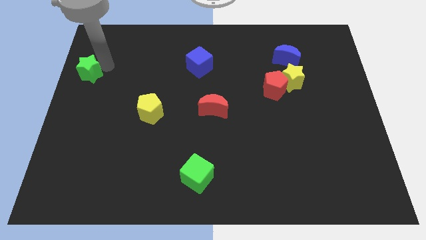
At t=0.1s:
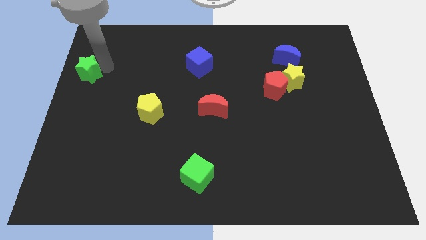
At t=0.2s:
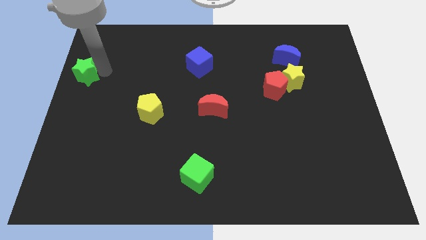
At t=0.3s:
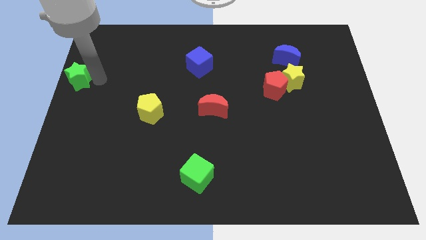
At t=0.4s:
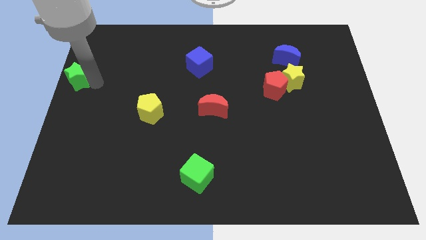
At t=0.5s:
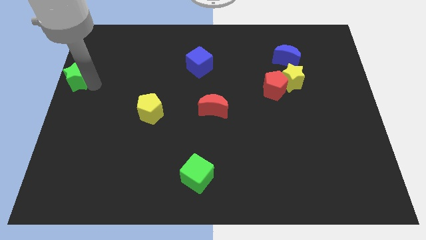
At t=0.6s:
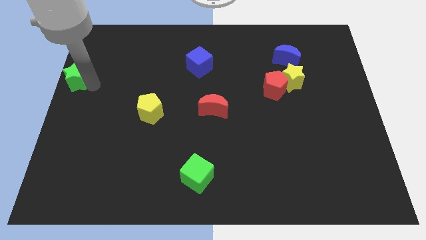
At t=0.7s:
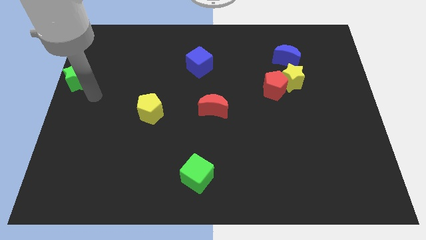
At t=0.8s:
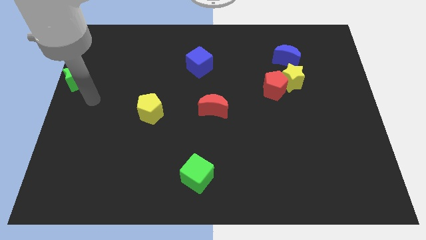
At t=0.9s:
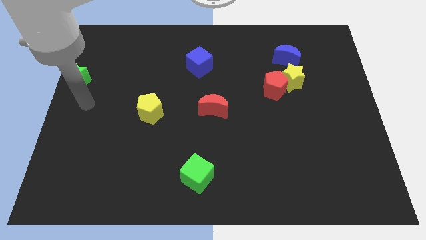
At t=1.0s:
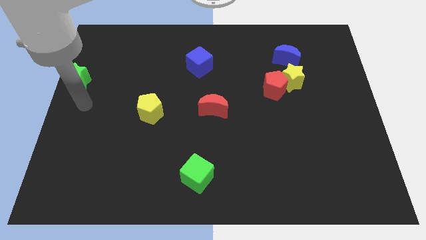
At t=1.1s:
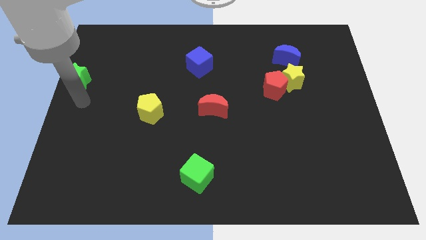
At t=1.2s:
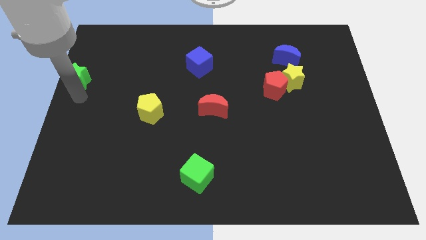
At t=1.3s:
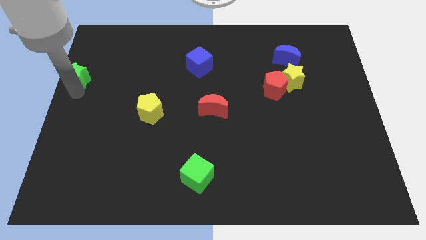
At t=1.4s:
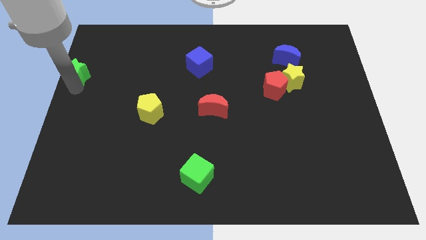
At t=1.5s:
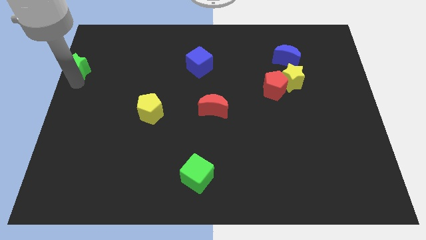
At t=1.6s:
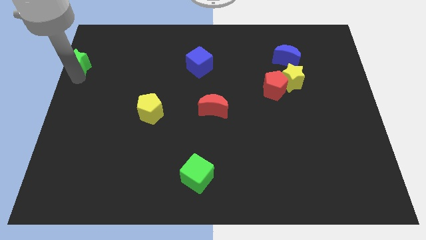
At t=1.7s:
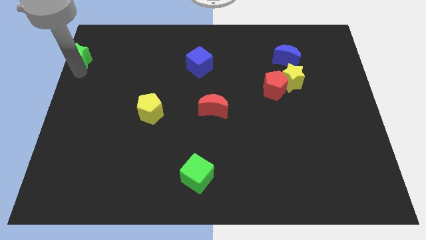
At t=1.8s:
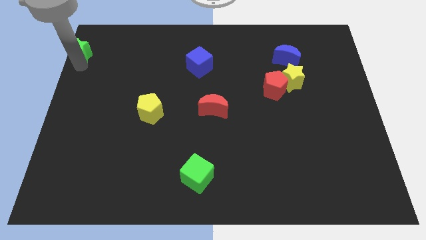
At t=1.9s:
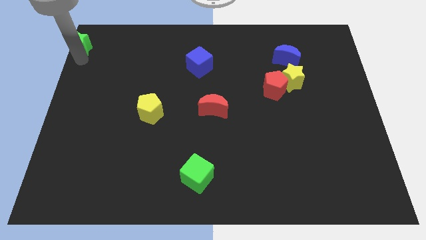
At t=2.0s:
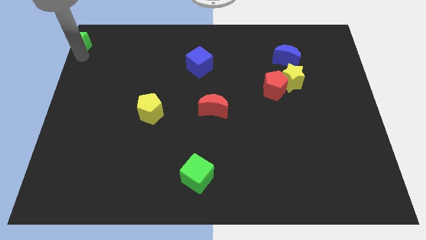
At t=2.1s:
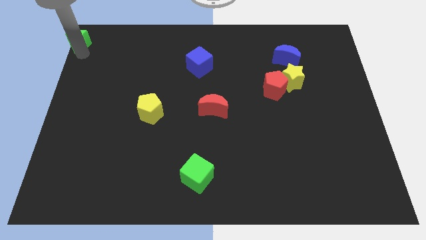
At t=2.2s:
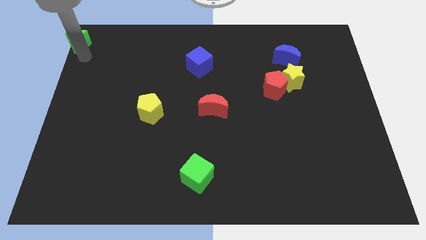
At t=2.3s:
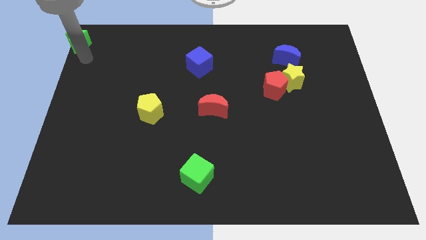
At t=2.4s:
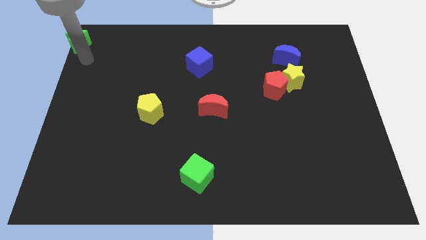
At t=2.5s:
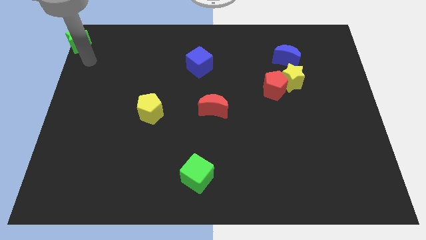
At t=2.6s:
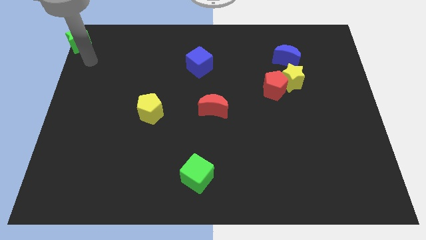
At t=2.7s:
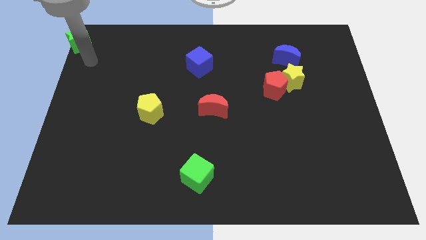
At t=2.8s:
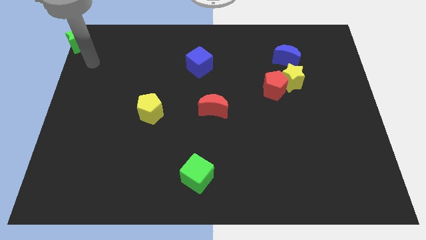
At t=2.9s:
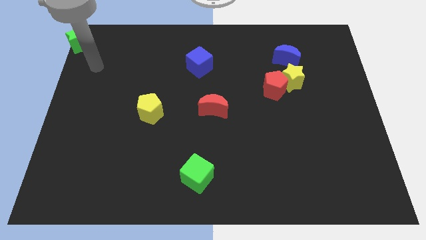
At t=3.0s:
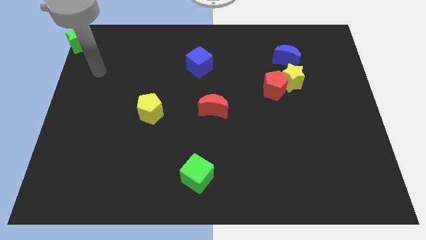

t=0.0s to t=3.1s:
place the green star at the top left corner of the board

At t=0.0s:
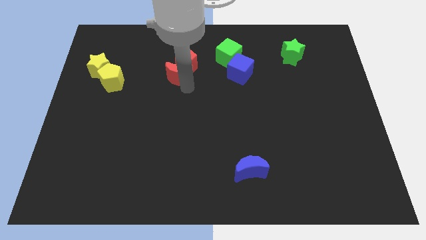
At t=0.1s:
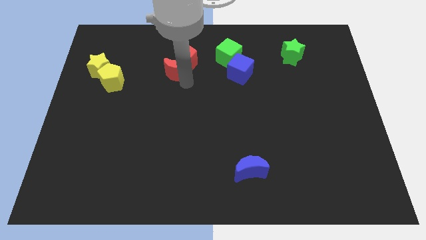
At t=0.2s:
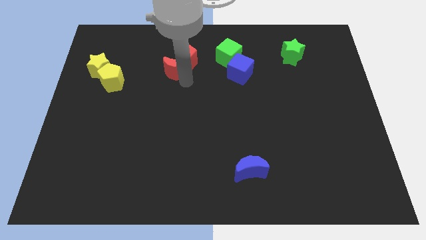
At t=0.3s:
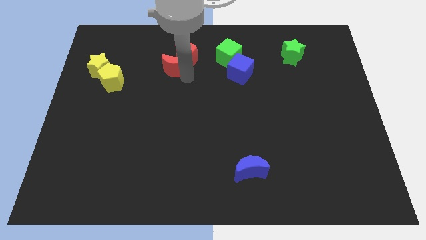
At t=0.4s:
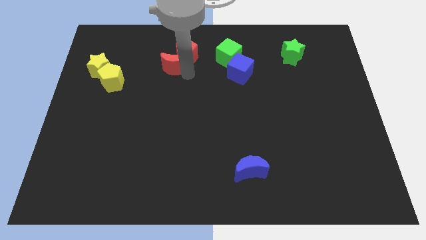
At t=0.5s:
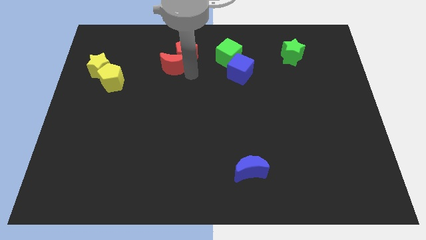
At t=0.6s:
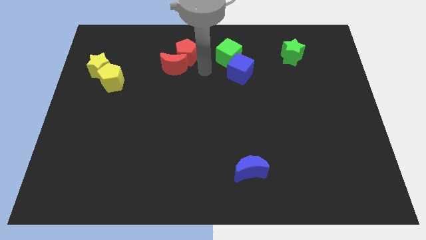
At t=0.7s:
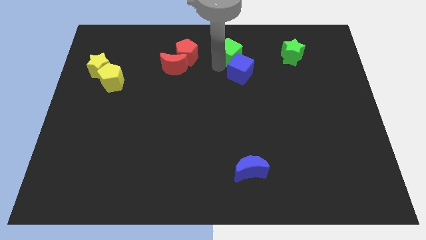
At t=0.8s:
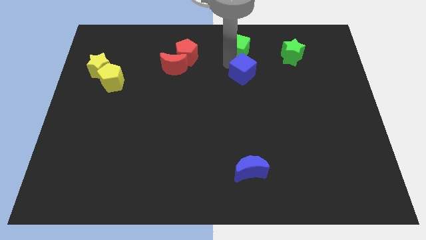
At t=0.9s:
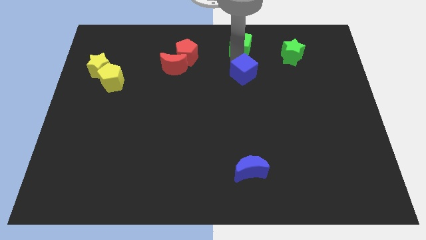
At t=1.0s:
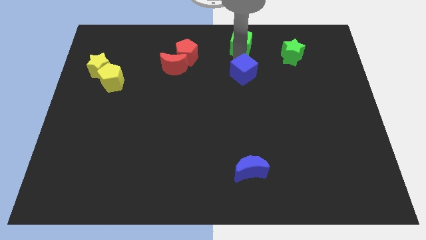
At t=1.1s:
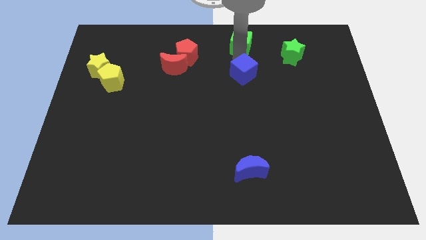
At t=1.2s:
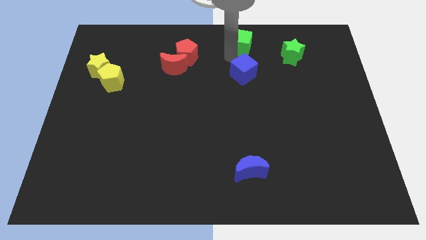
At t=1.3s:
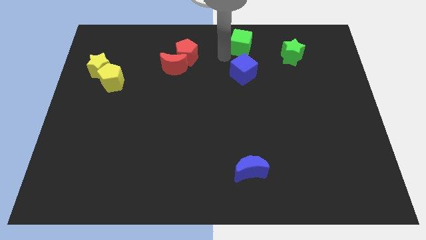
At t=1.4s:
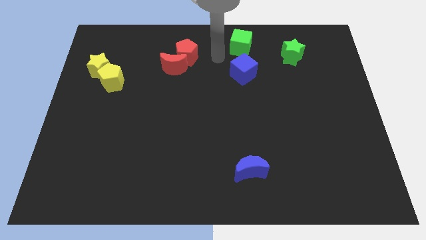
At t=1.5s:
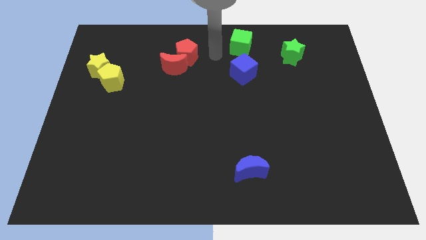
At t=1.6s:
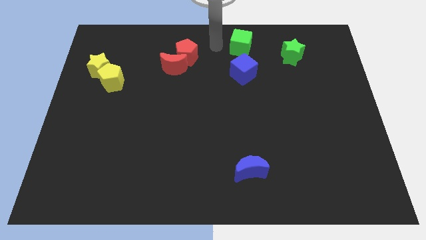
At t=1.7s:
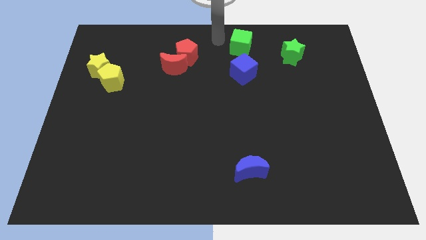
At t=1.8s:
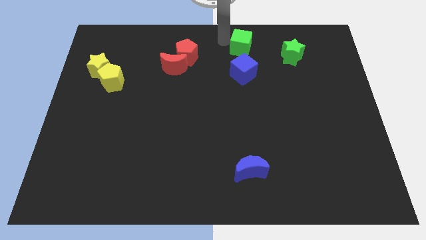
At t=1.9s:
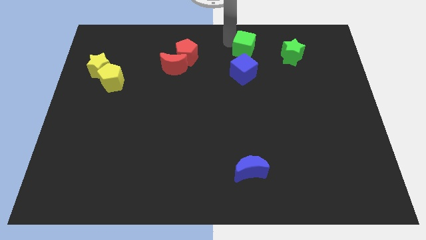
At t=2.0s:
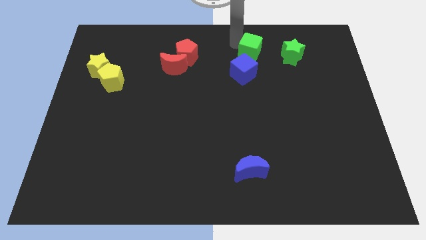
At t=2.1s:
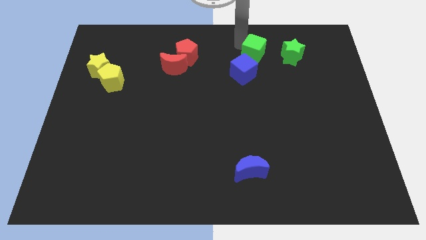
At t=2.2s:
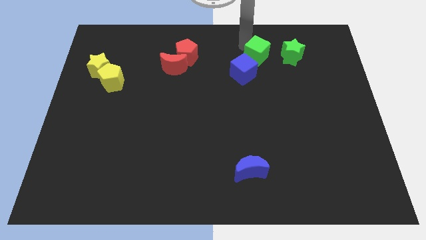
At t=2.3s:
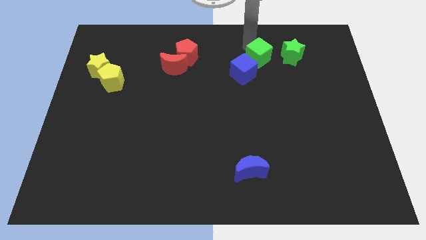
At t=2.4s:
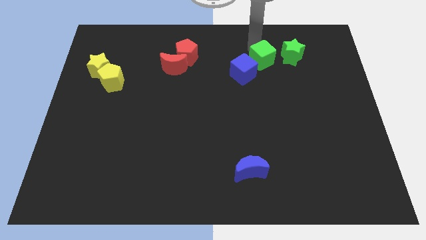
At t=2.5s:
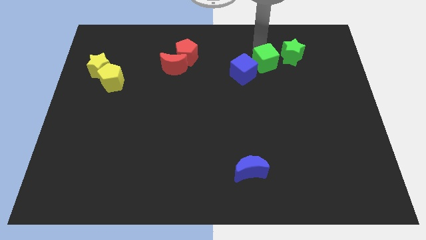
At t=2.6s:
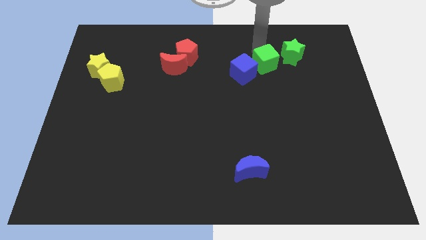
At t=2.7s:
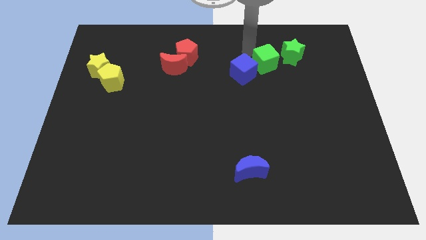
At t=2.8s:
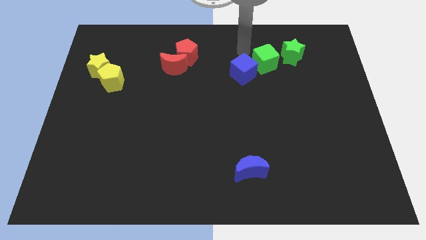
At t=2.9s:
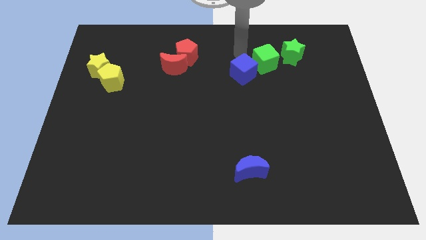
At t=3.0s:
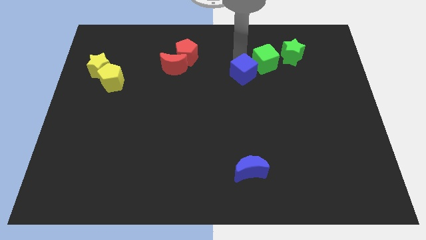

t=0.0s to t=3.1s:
move the green cube in between the green star and blue cube

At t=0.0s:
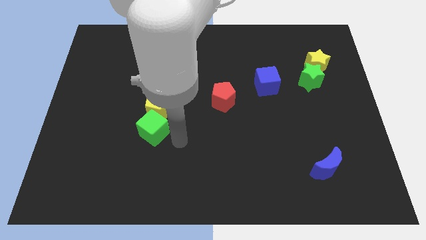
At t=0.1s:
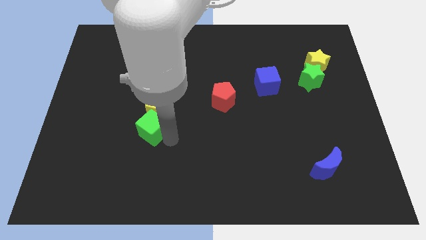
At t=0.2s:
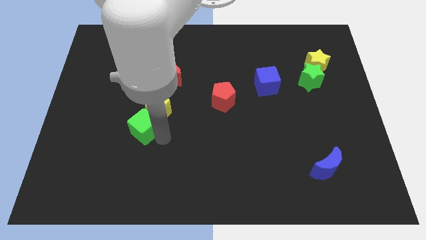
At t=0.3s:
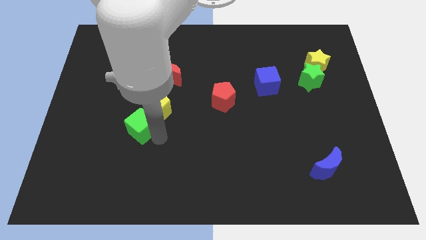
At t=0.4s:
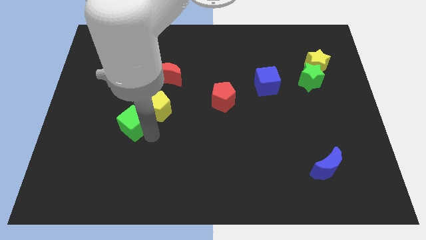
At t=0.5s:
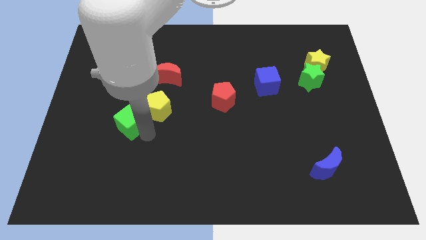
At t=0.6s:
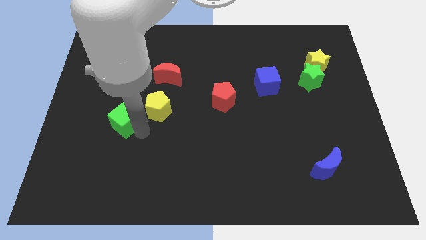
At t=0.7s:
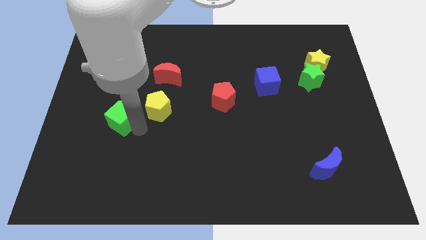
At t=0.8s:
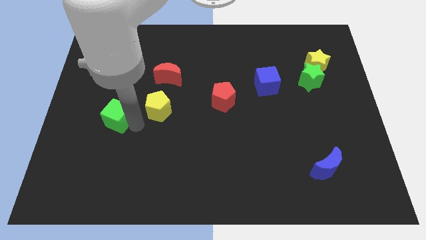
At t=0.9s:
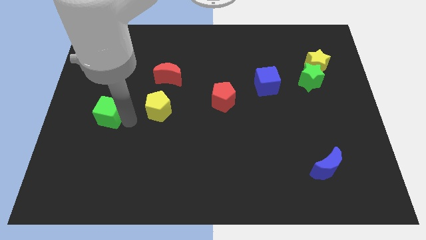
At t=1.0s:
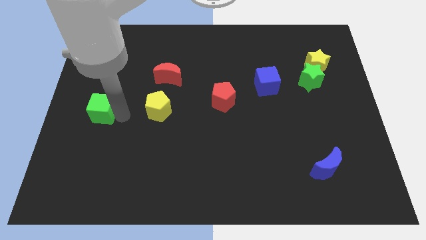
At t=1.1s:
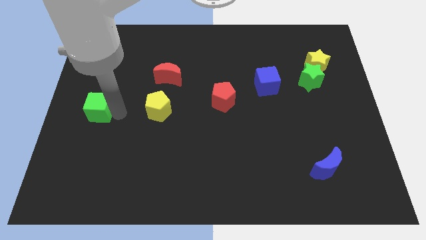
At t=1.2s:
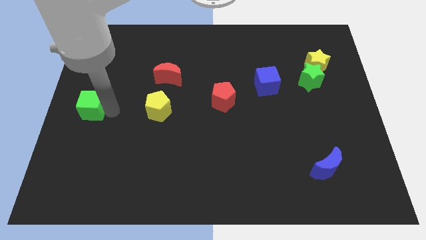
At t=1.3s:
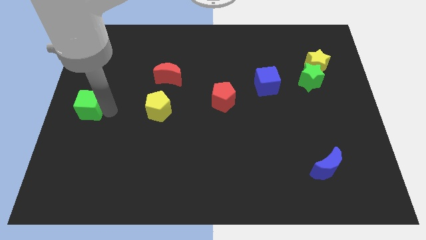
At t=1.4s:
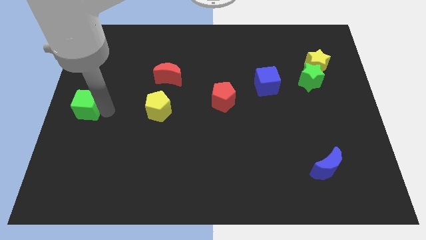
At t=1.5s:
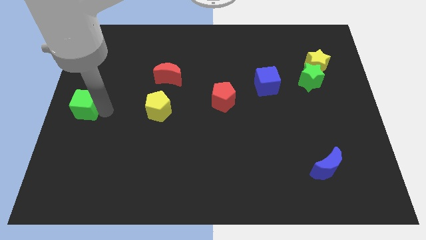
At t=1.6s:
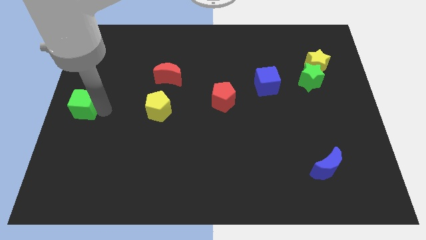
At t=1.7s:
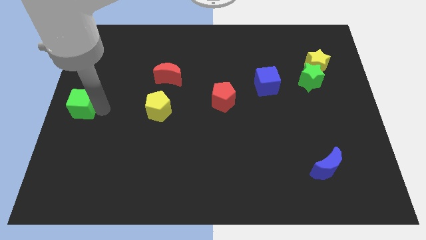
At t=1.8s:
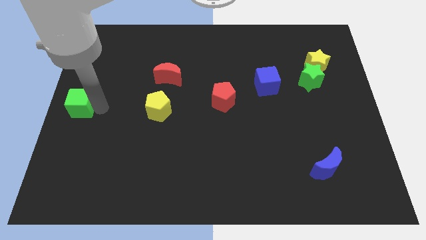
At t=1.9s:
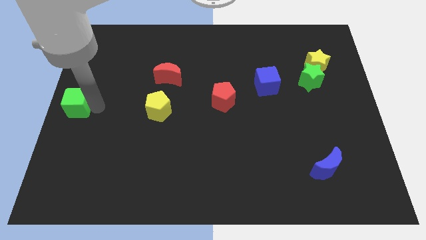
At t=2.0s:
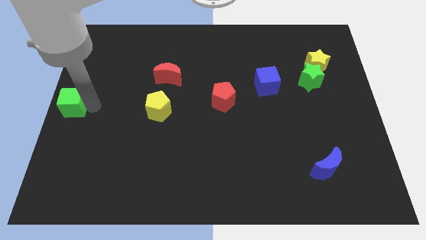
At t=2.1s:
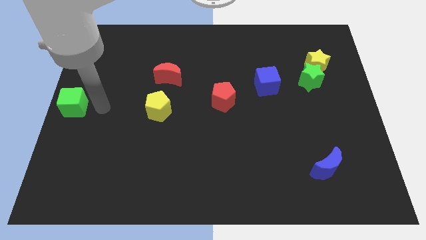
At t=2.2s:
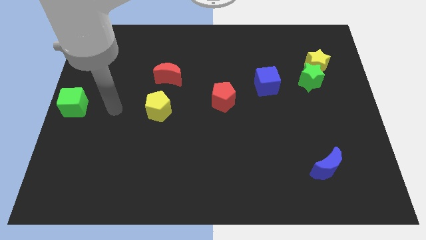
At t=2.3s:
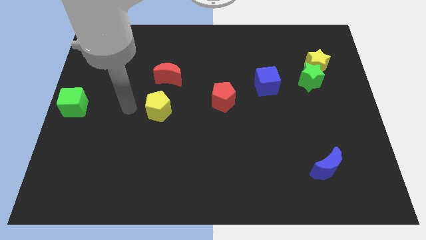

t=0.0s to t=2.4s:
push the green cube to the center left of the board
